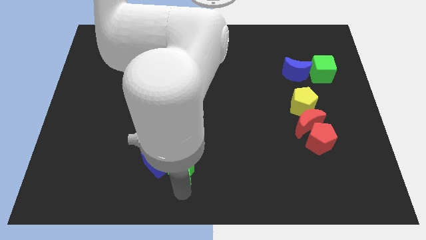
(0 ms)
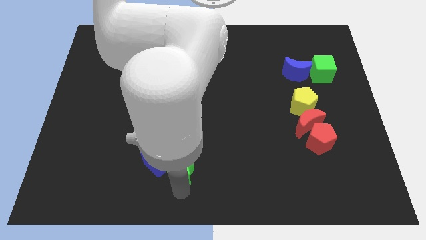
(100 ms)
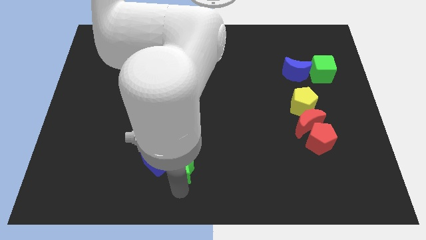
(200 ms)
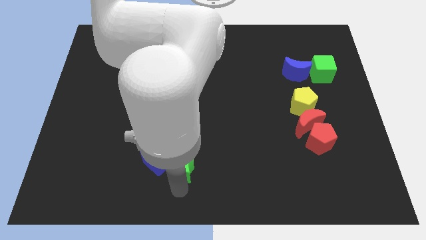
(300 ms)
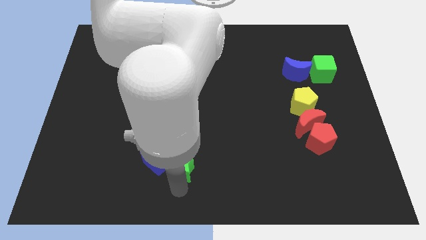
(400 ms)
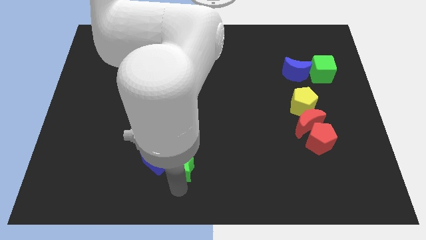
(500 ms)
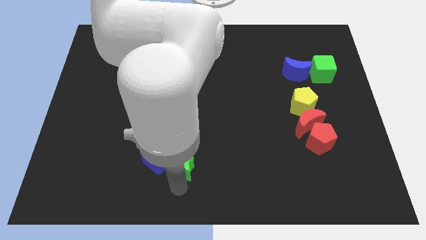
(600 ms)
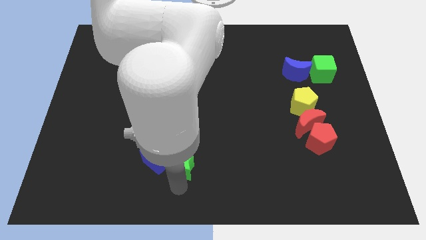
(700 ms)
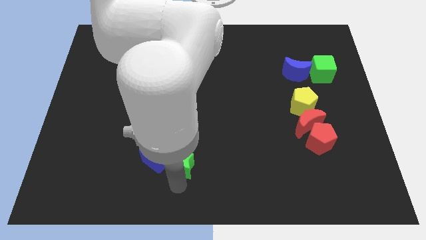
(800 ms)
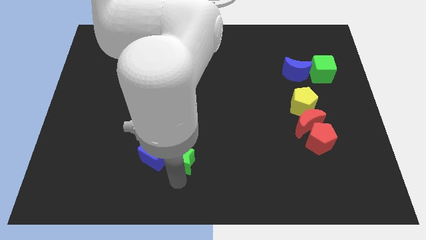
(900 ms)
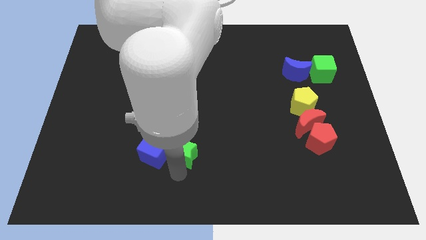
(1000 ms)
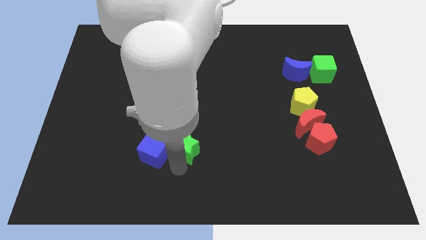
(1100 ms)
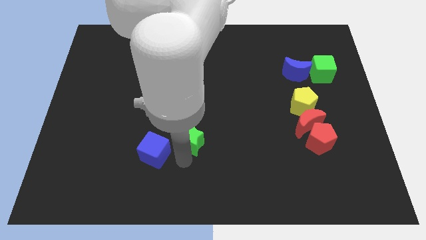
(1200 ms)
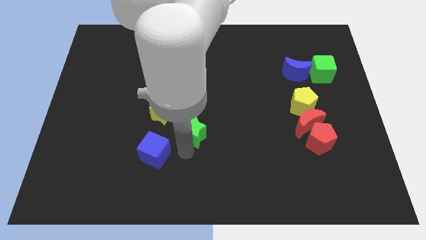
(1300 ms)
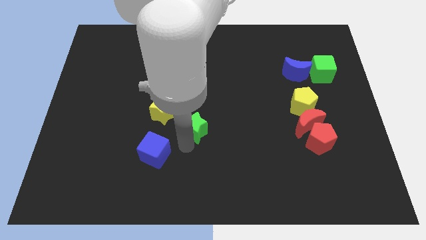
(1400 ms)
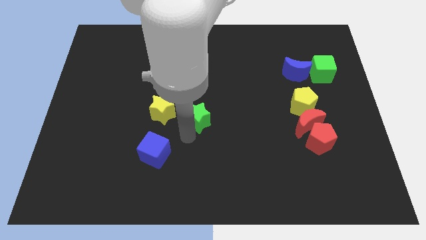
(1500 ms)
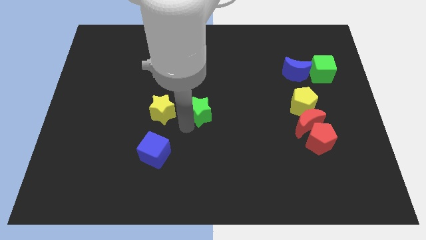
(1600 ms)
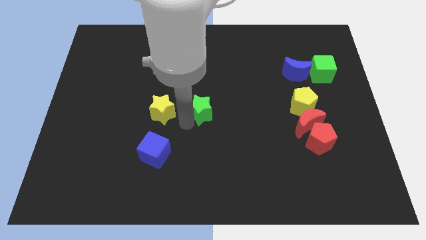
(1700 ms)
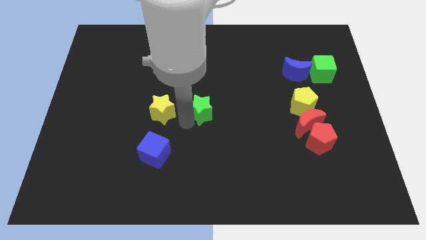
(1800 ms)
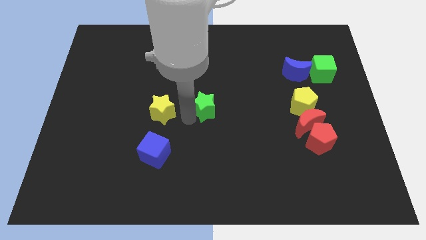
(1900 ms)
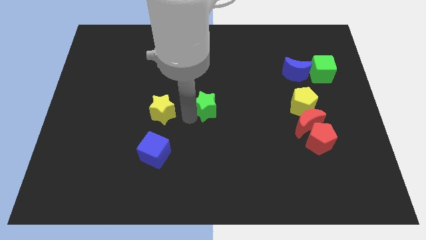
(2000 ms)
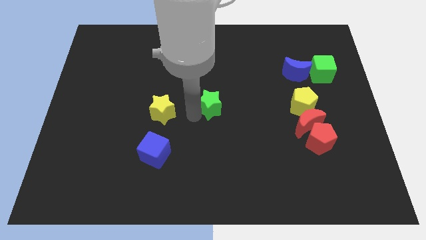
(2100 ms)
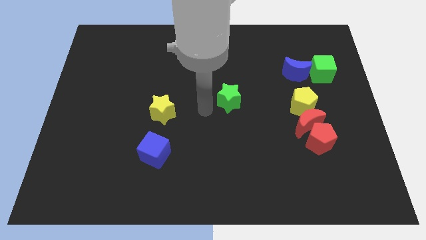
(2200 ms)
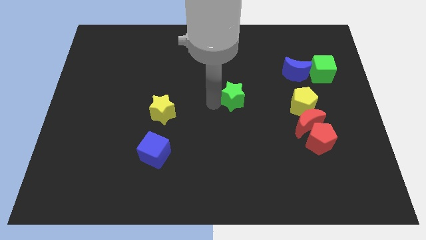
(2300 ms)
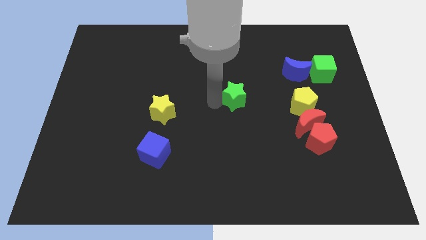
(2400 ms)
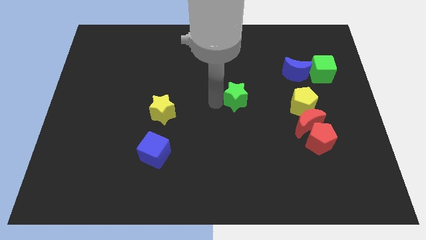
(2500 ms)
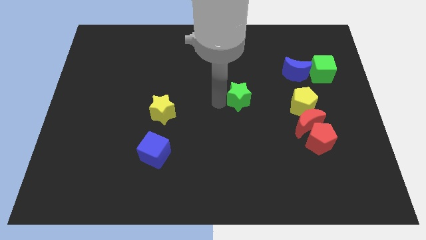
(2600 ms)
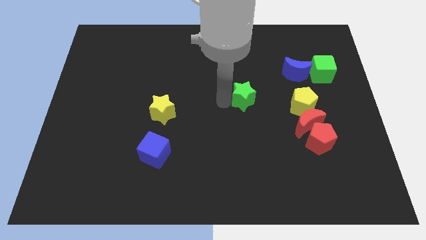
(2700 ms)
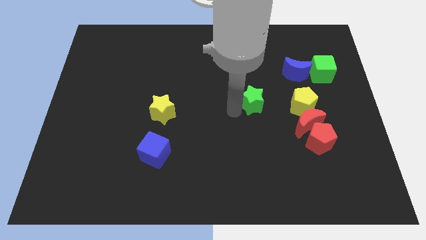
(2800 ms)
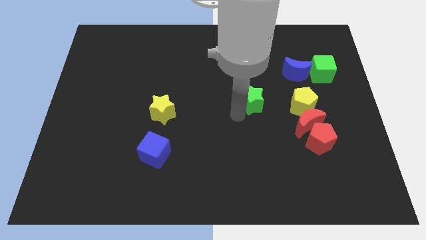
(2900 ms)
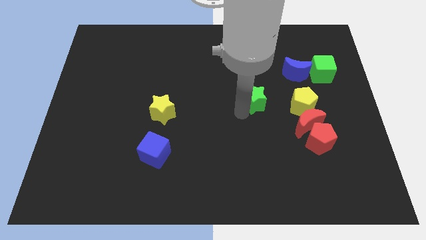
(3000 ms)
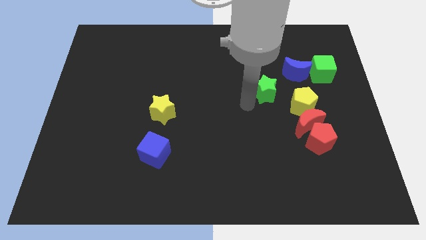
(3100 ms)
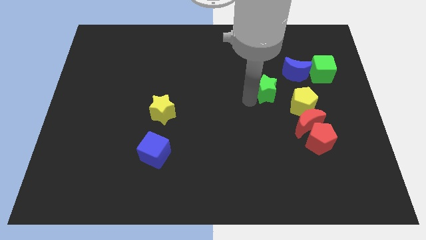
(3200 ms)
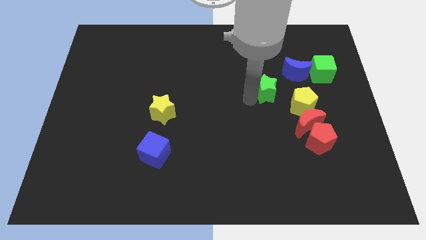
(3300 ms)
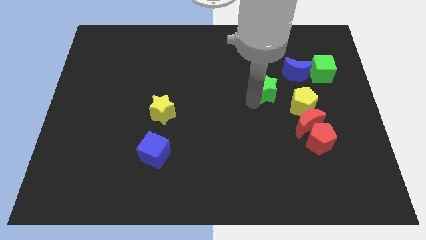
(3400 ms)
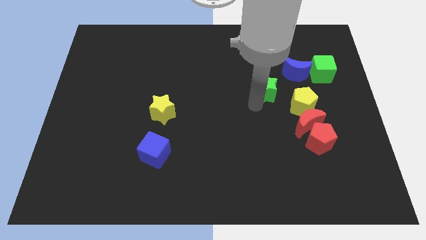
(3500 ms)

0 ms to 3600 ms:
move the green star close to the center side

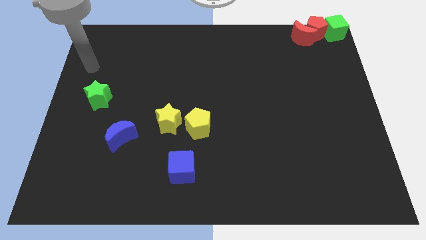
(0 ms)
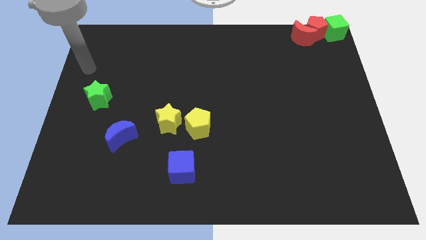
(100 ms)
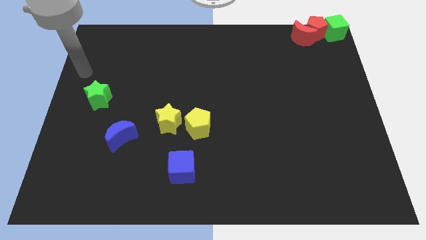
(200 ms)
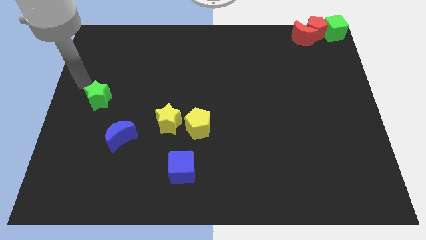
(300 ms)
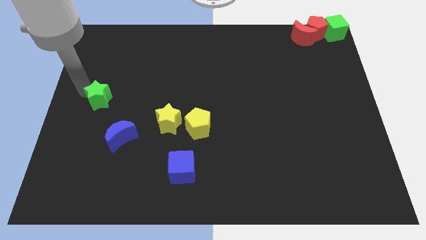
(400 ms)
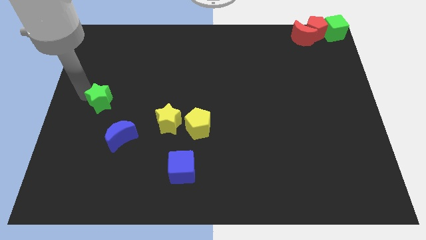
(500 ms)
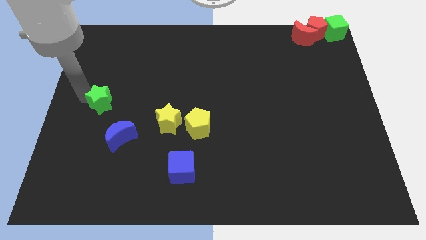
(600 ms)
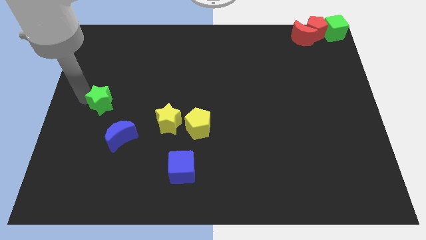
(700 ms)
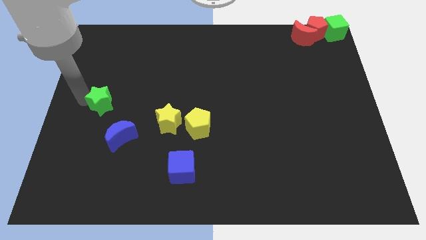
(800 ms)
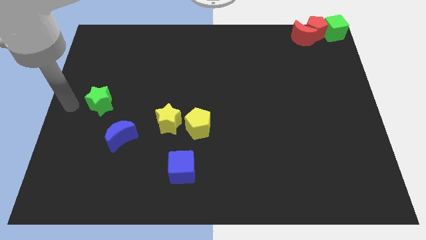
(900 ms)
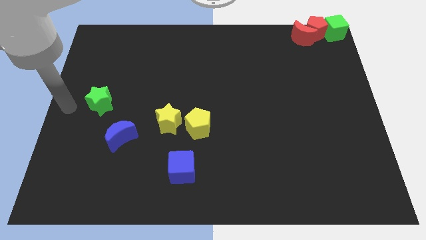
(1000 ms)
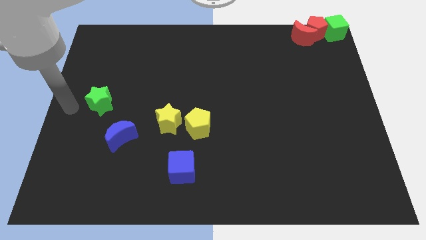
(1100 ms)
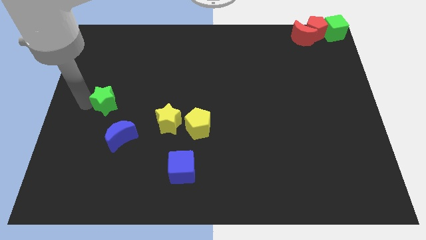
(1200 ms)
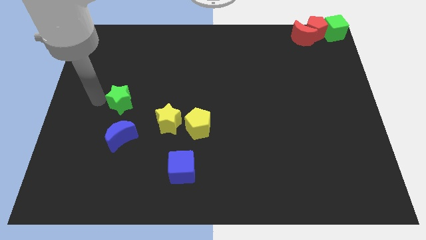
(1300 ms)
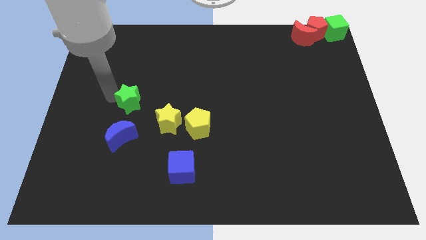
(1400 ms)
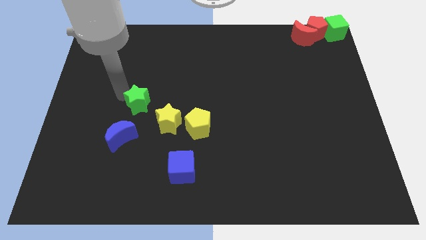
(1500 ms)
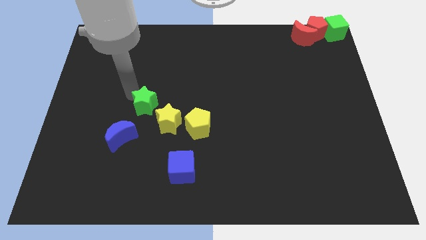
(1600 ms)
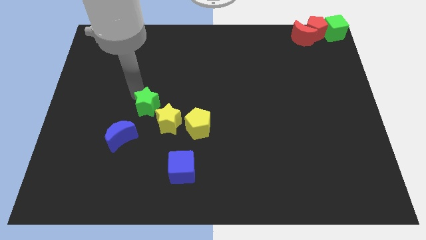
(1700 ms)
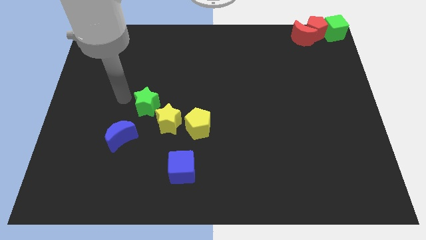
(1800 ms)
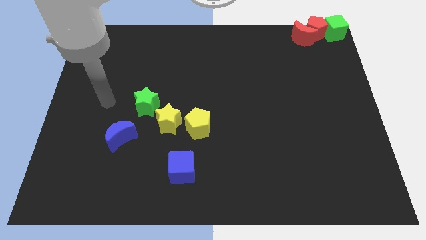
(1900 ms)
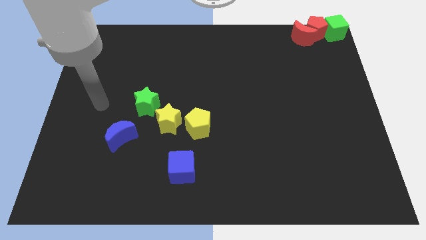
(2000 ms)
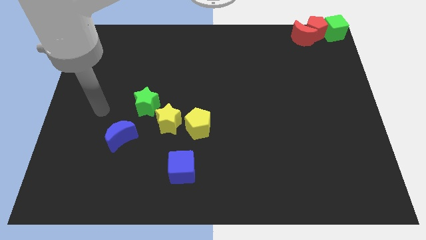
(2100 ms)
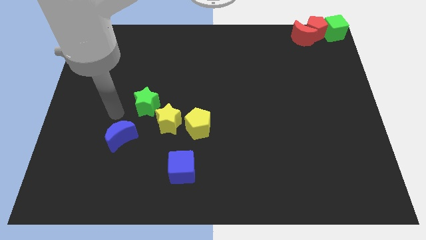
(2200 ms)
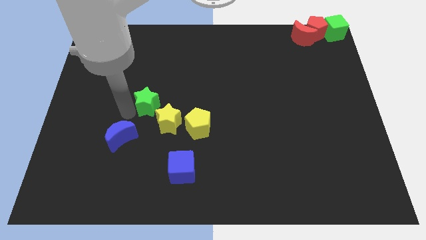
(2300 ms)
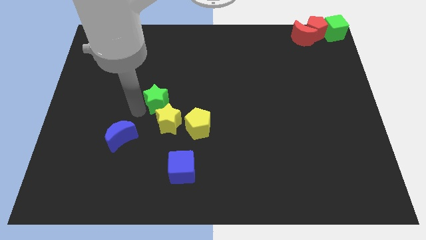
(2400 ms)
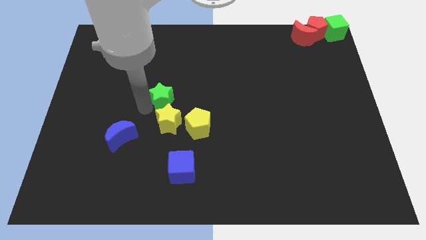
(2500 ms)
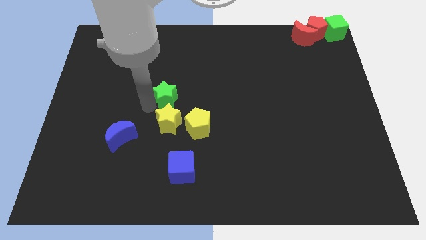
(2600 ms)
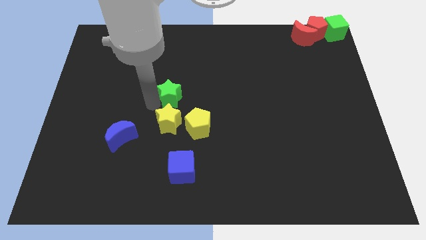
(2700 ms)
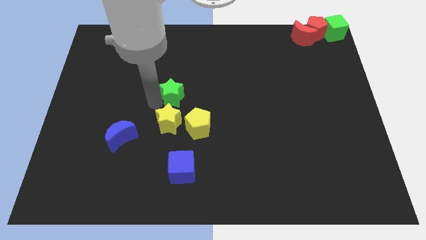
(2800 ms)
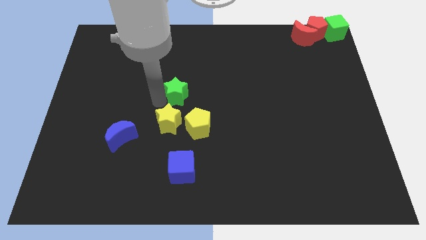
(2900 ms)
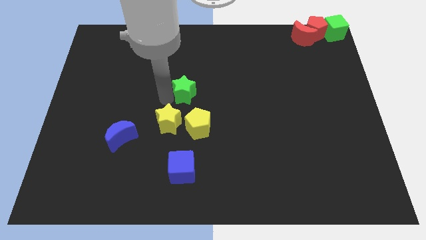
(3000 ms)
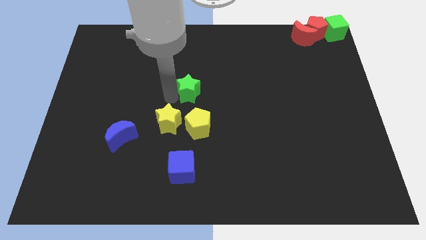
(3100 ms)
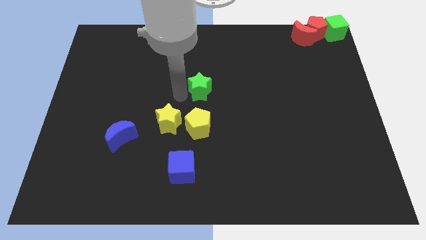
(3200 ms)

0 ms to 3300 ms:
place green star above yellow pentagon

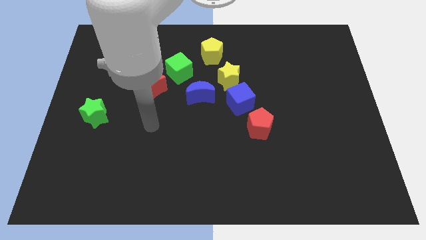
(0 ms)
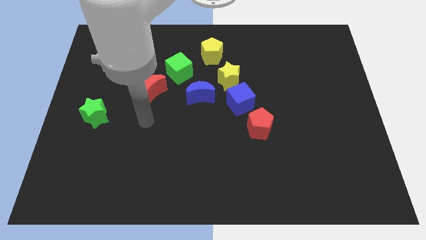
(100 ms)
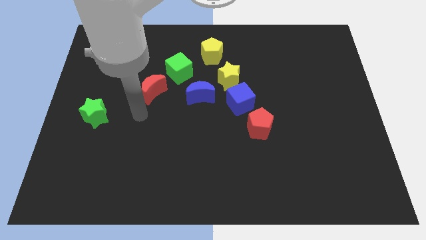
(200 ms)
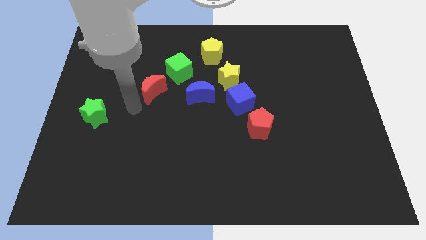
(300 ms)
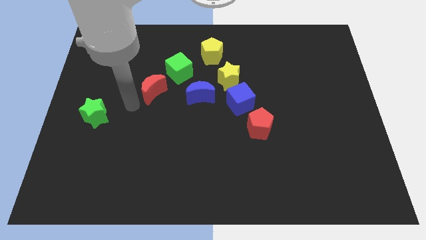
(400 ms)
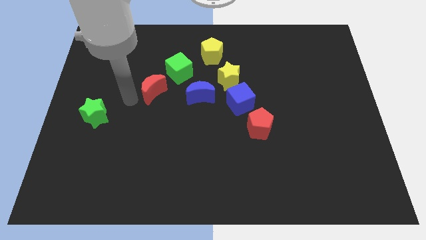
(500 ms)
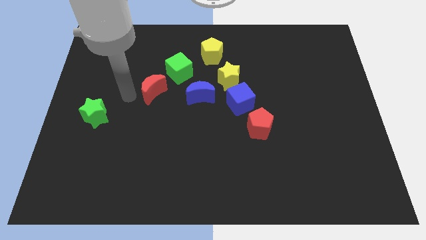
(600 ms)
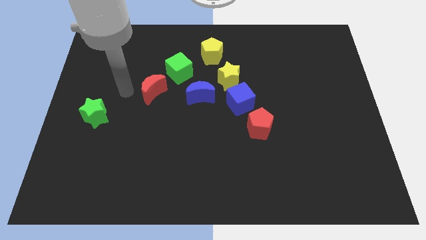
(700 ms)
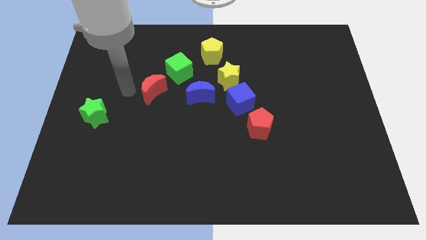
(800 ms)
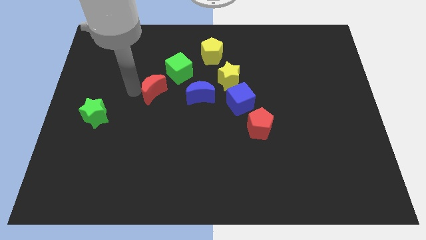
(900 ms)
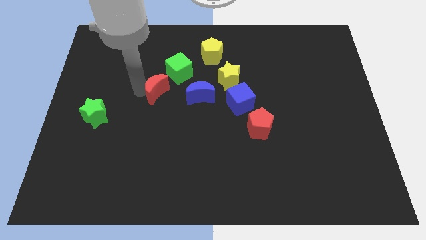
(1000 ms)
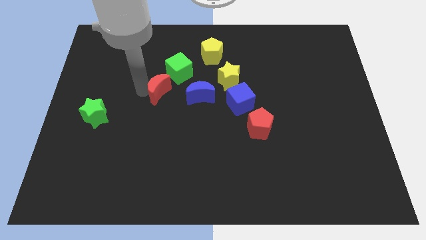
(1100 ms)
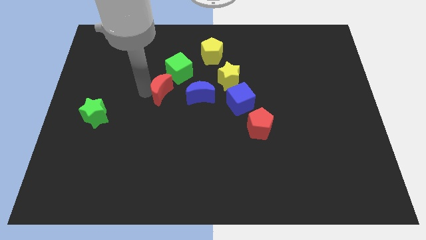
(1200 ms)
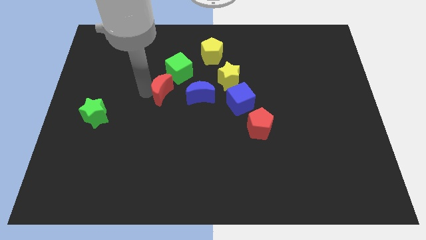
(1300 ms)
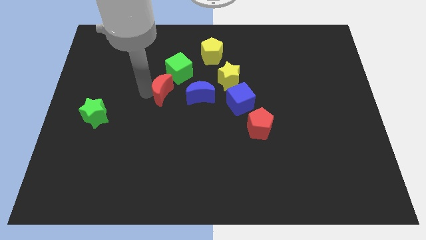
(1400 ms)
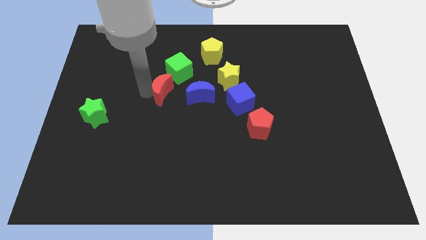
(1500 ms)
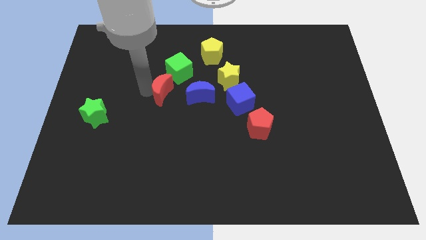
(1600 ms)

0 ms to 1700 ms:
slightly move the red crescent towards right

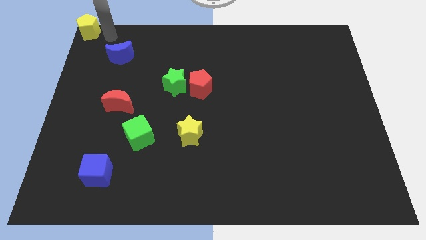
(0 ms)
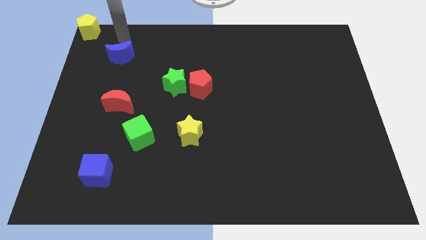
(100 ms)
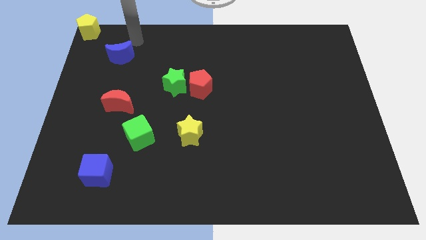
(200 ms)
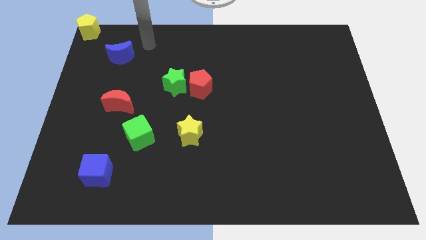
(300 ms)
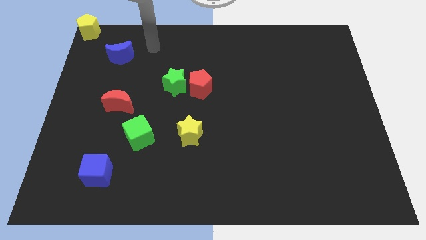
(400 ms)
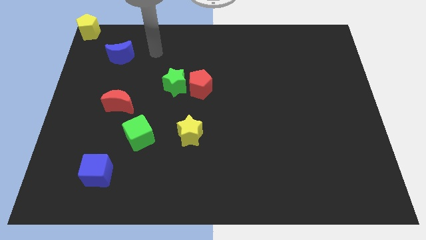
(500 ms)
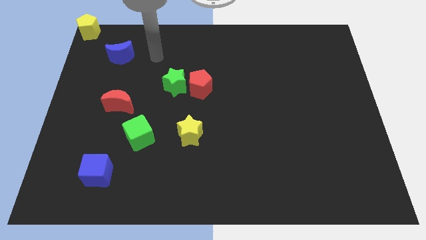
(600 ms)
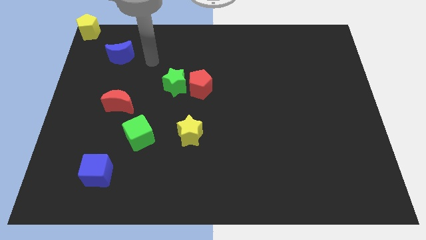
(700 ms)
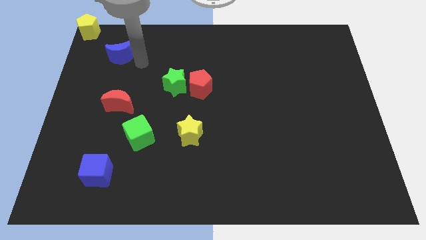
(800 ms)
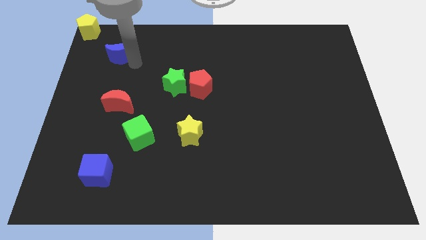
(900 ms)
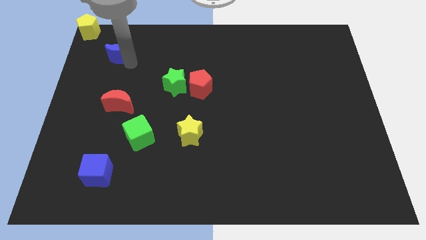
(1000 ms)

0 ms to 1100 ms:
place your arm at the bottom right side of blue crescent
